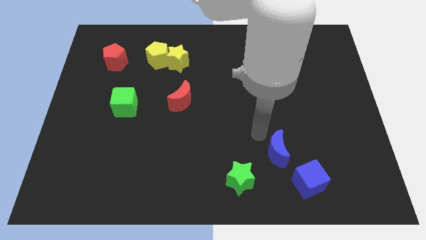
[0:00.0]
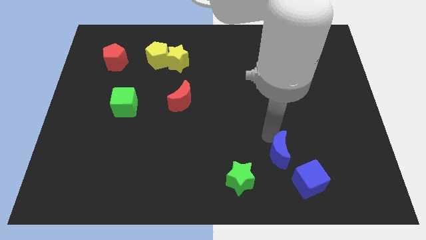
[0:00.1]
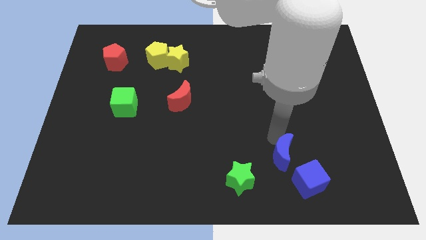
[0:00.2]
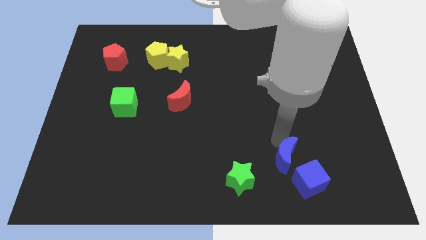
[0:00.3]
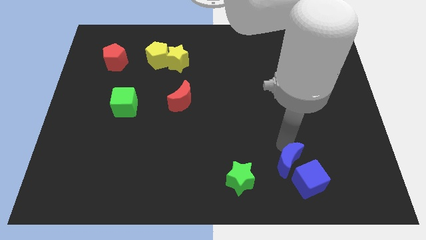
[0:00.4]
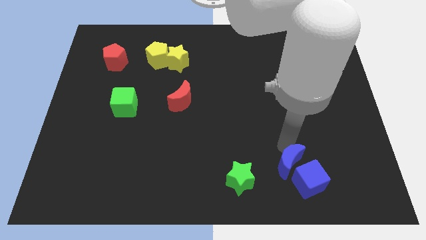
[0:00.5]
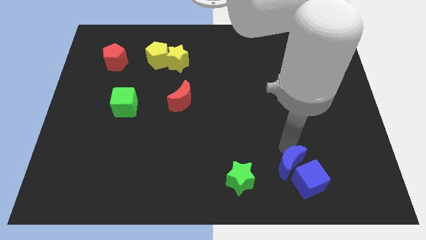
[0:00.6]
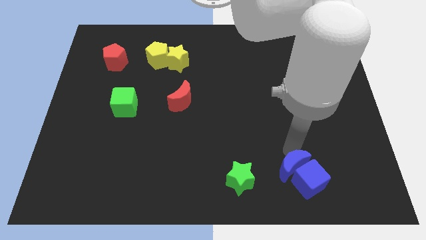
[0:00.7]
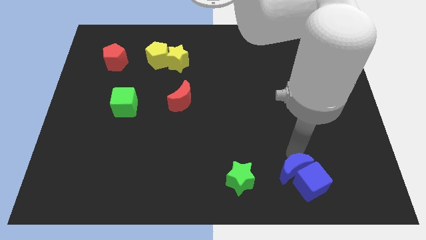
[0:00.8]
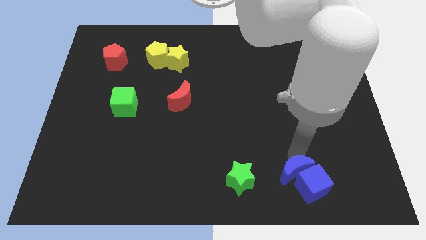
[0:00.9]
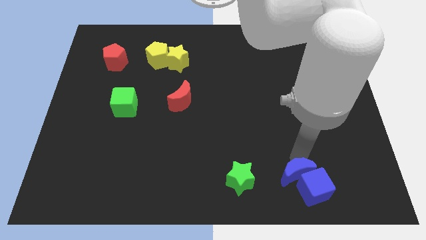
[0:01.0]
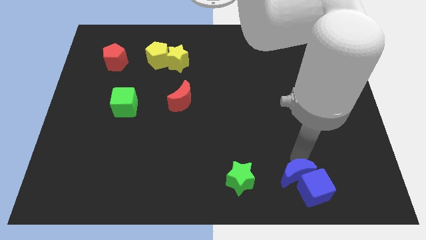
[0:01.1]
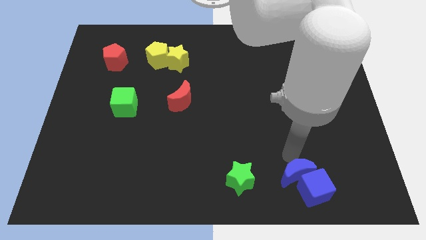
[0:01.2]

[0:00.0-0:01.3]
slide the blue crescent into the top side of the blue cube

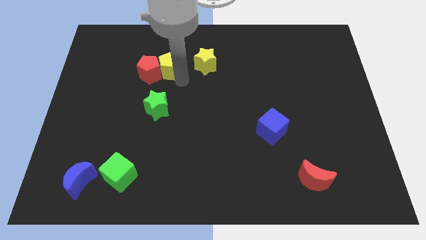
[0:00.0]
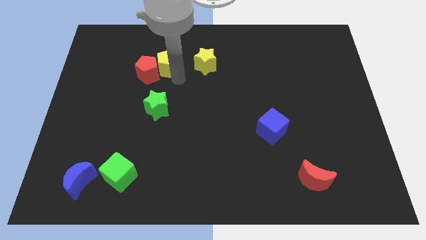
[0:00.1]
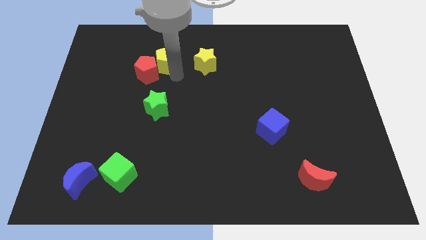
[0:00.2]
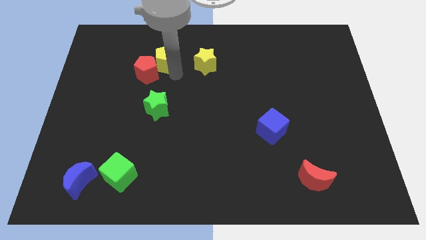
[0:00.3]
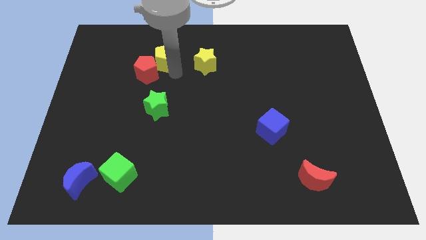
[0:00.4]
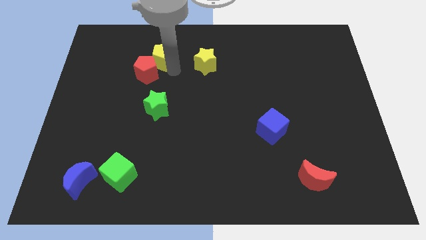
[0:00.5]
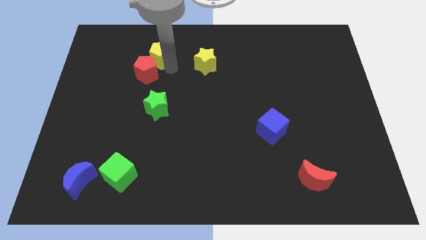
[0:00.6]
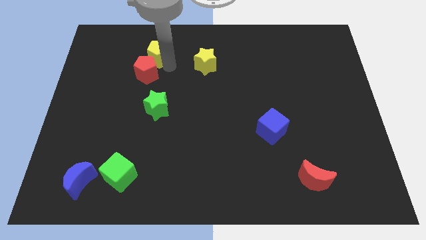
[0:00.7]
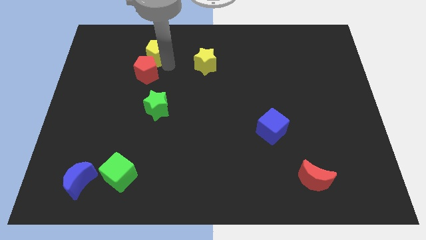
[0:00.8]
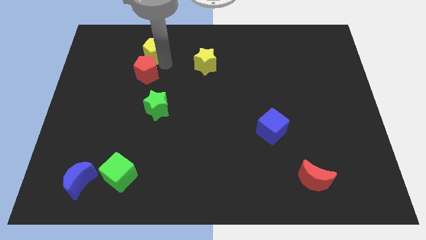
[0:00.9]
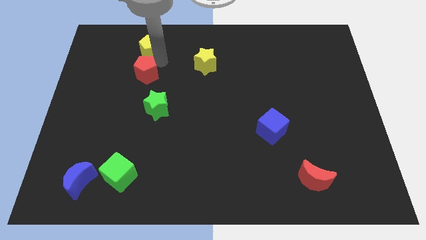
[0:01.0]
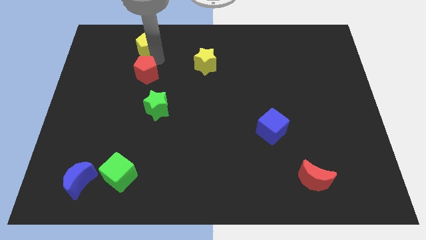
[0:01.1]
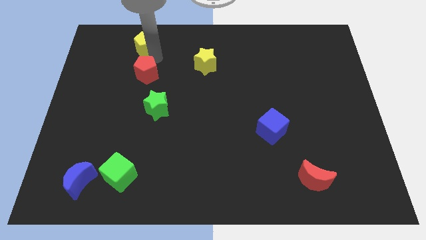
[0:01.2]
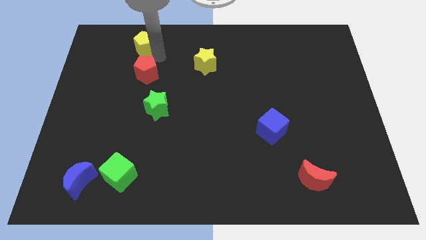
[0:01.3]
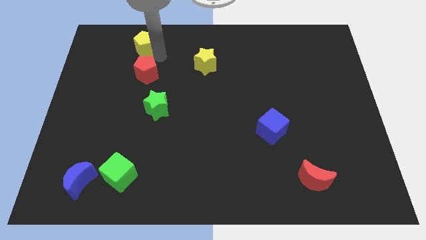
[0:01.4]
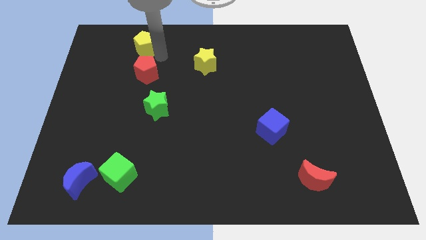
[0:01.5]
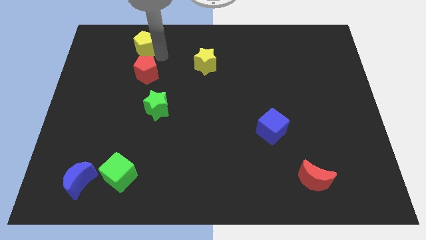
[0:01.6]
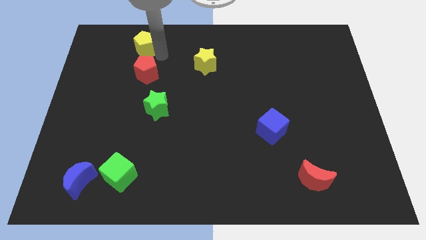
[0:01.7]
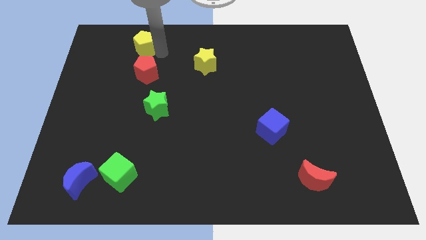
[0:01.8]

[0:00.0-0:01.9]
place the yellow pentagon above the red pentagon

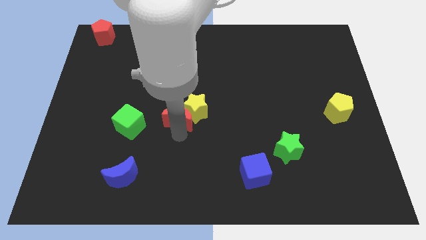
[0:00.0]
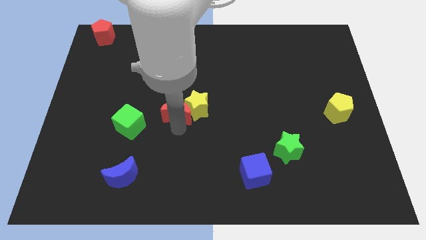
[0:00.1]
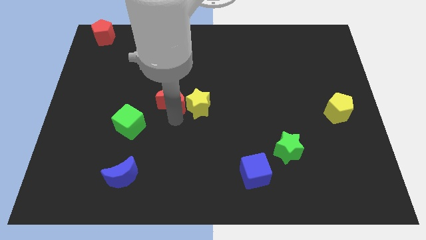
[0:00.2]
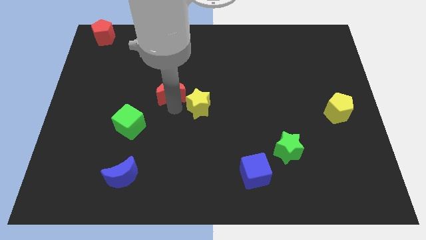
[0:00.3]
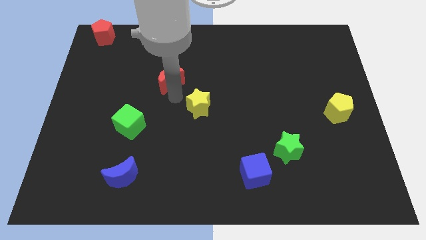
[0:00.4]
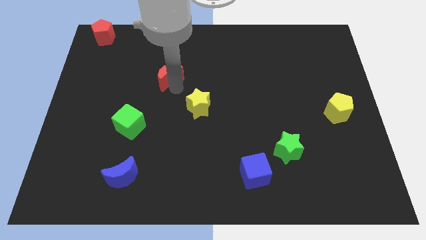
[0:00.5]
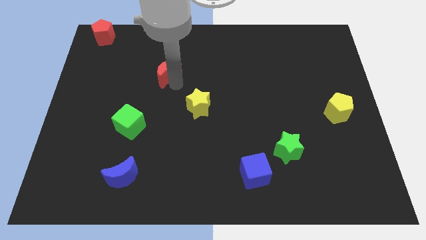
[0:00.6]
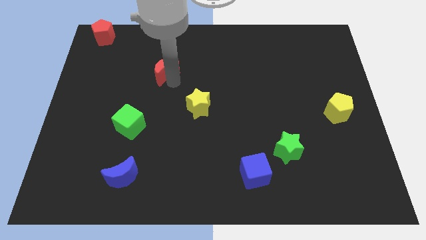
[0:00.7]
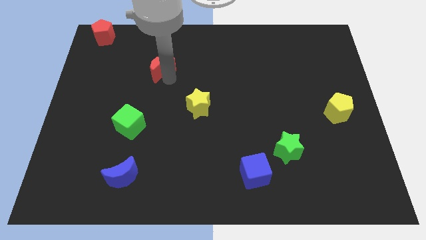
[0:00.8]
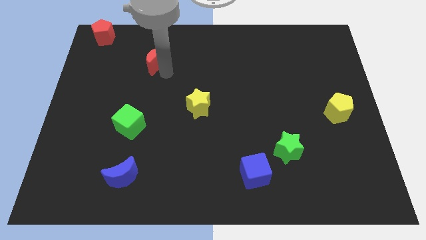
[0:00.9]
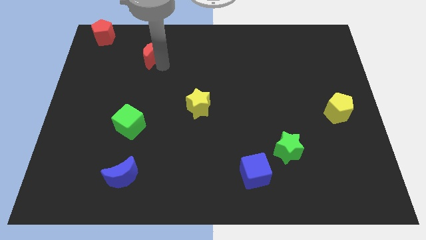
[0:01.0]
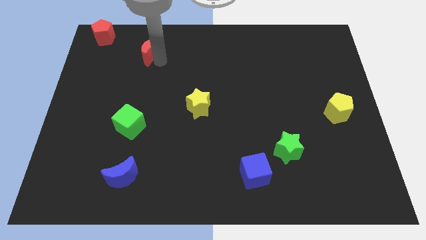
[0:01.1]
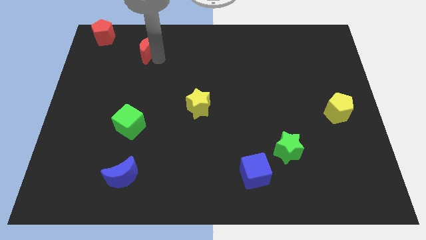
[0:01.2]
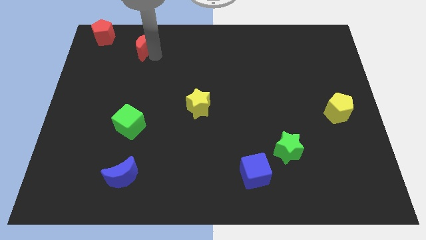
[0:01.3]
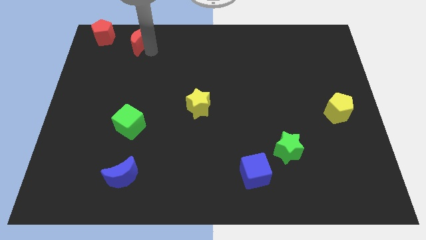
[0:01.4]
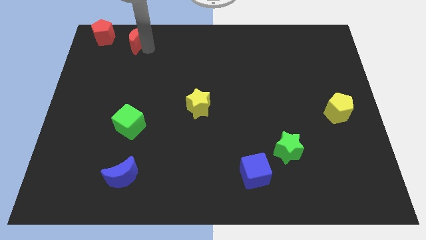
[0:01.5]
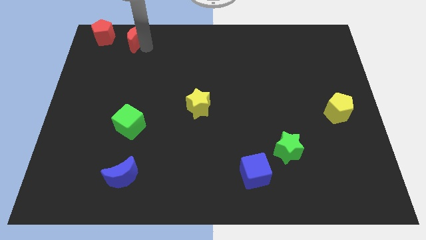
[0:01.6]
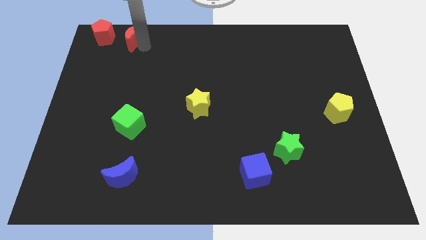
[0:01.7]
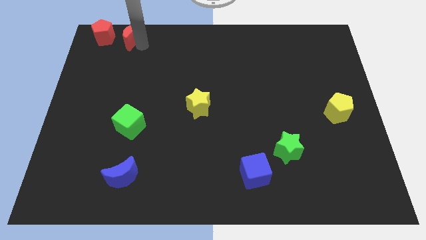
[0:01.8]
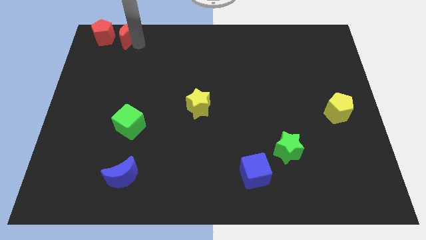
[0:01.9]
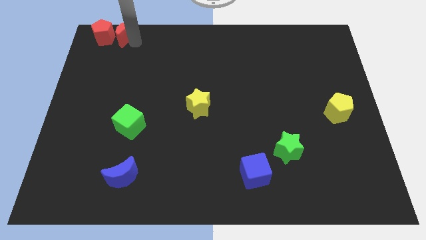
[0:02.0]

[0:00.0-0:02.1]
place red crescent into the red pentagon

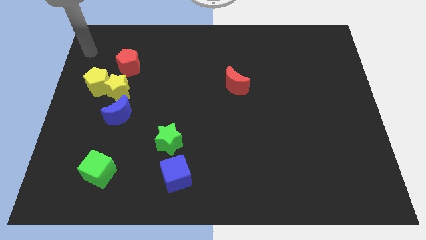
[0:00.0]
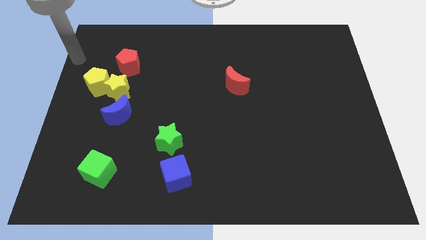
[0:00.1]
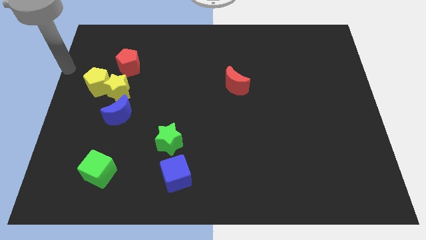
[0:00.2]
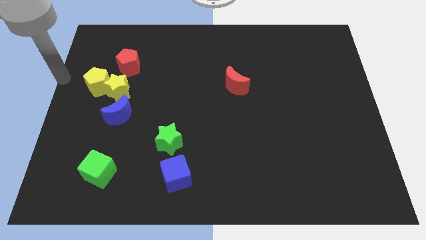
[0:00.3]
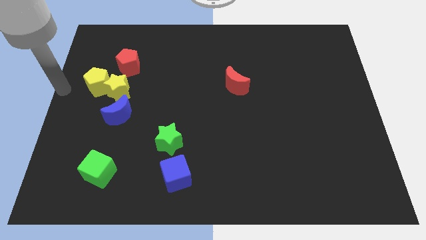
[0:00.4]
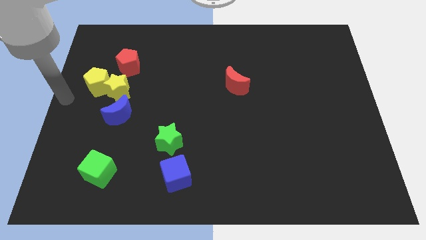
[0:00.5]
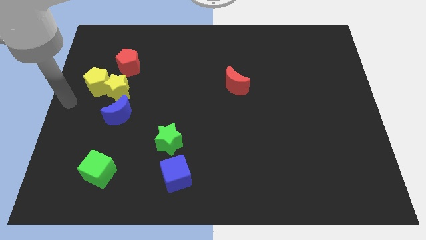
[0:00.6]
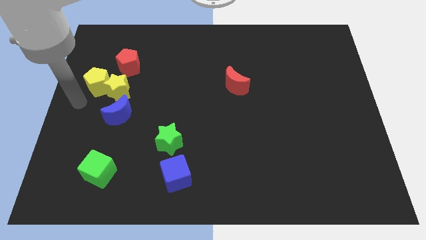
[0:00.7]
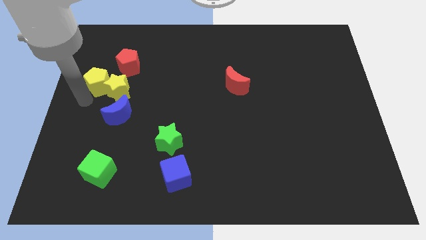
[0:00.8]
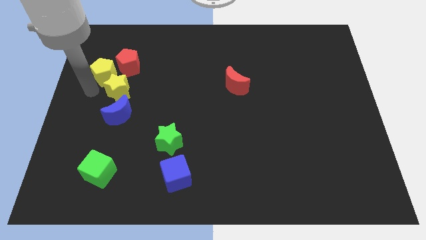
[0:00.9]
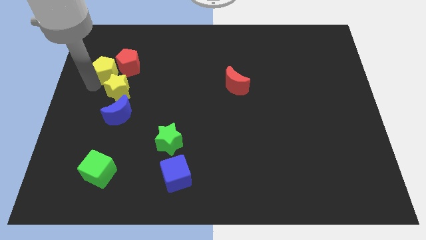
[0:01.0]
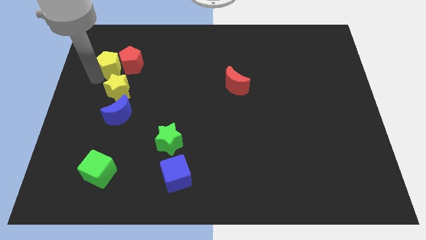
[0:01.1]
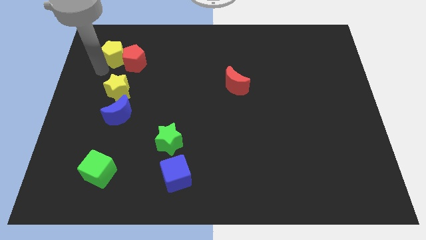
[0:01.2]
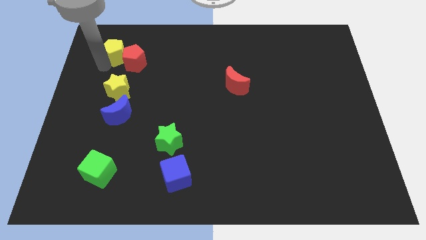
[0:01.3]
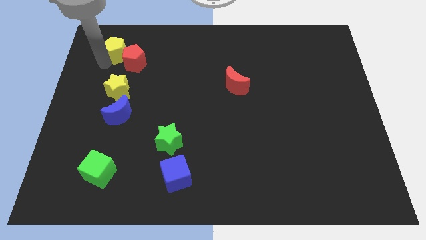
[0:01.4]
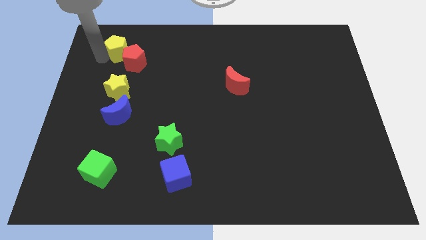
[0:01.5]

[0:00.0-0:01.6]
push the yellow pentagon into the red pentagon

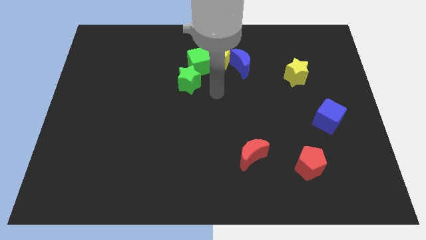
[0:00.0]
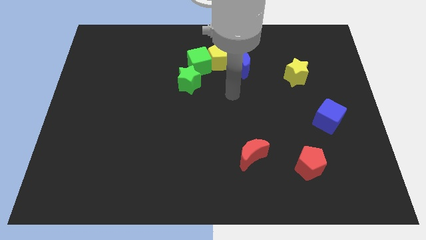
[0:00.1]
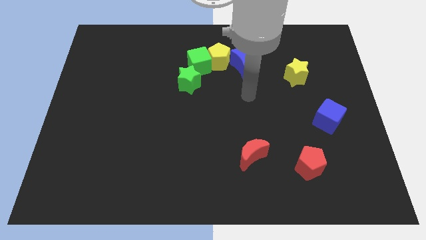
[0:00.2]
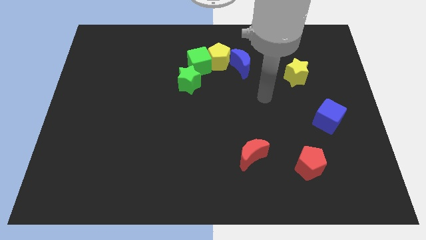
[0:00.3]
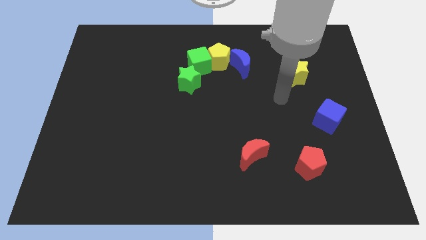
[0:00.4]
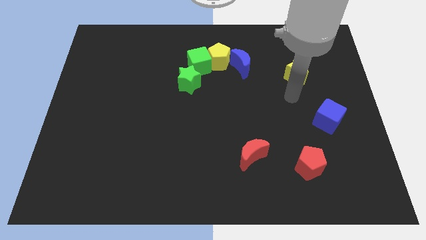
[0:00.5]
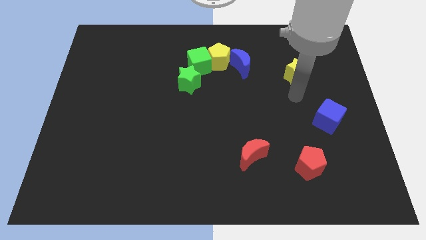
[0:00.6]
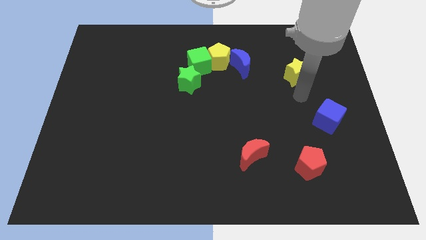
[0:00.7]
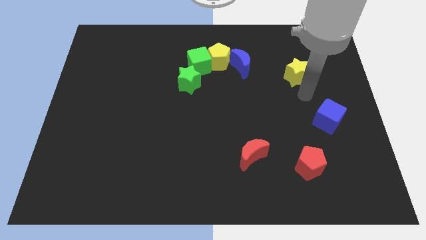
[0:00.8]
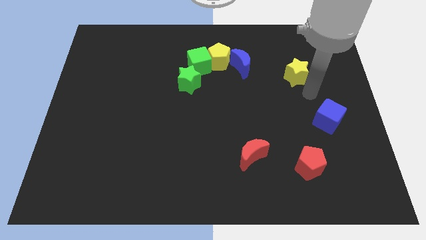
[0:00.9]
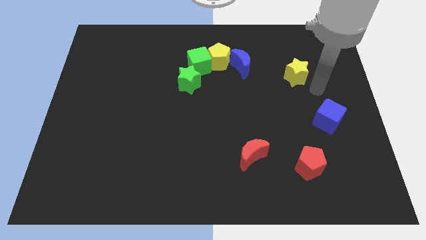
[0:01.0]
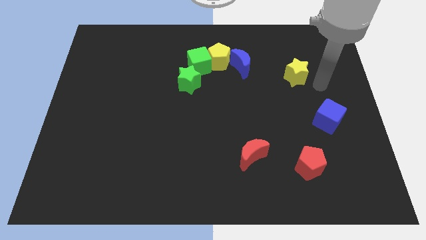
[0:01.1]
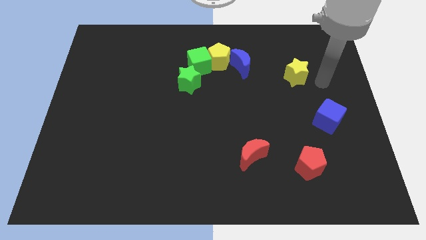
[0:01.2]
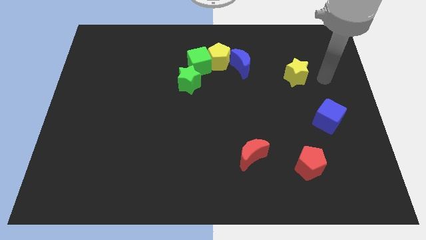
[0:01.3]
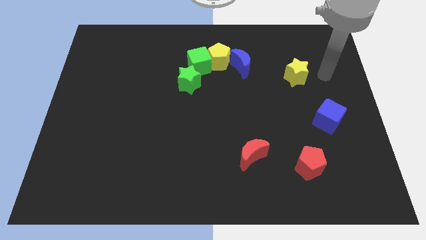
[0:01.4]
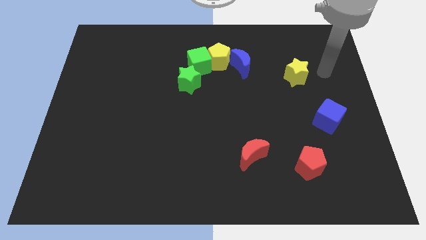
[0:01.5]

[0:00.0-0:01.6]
move your arm to the right of the yellow star
